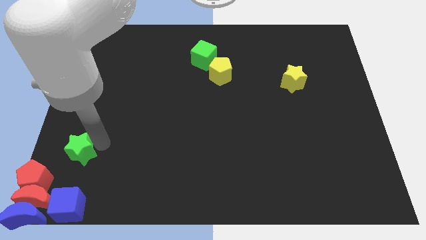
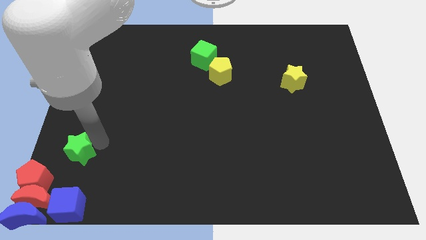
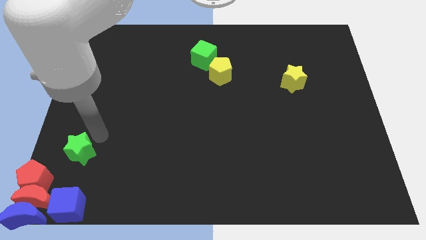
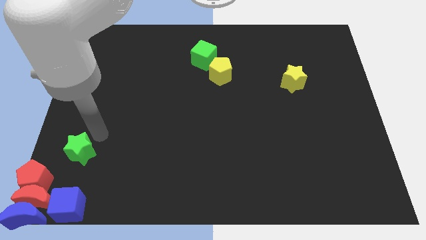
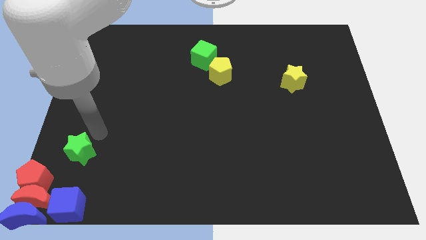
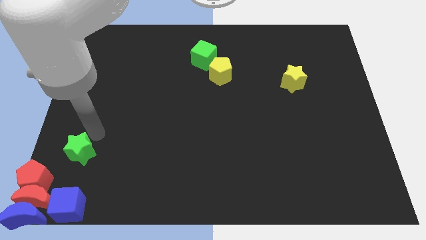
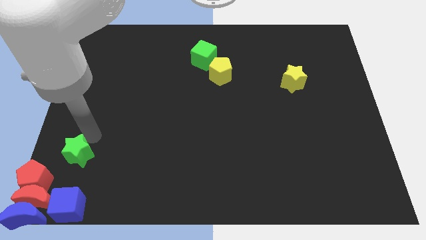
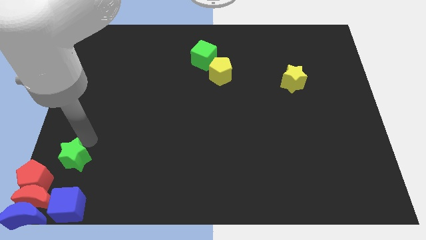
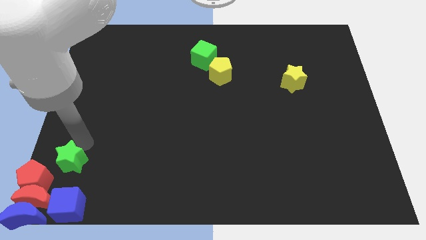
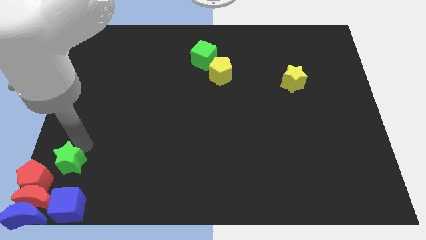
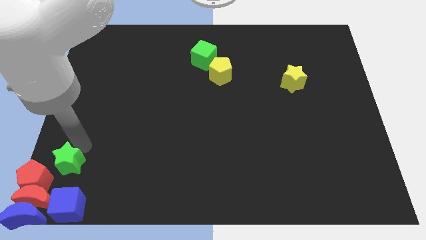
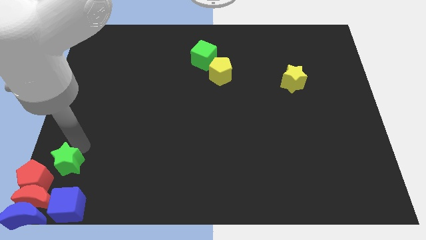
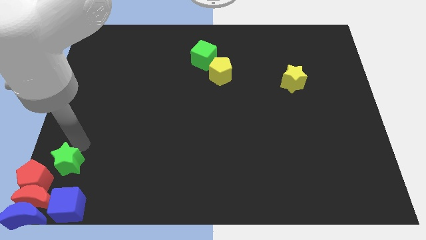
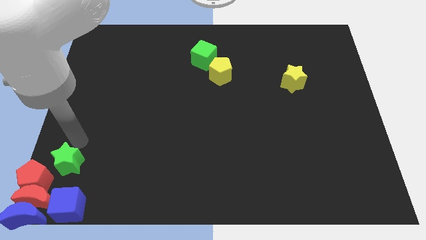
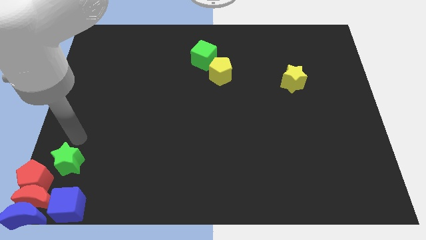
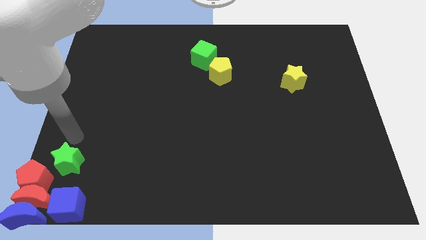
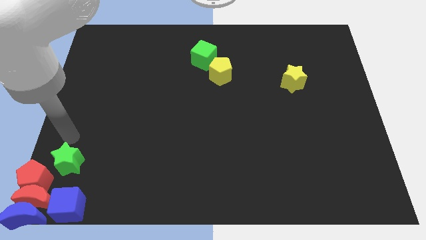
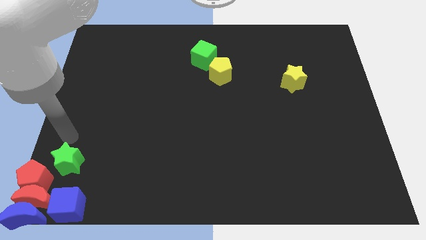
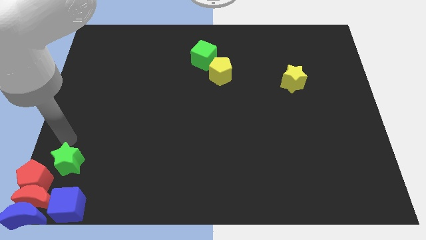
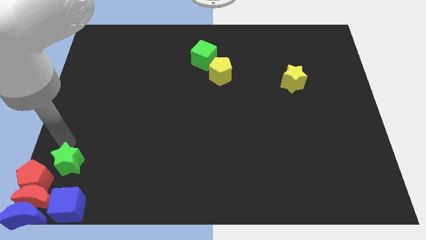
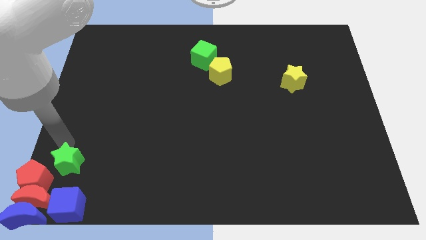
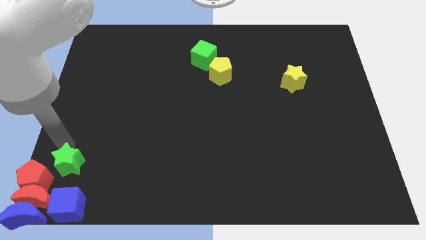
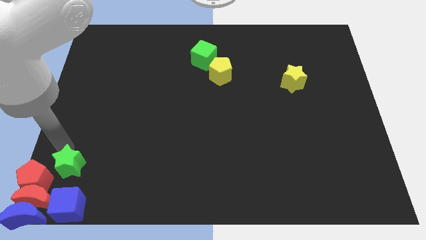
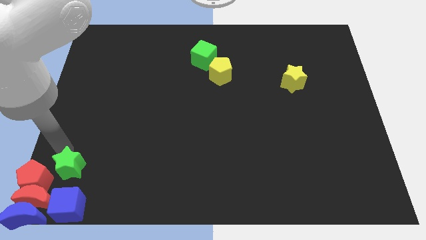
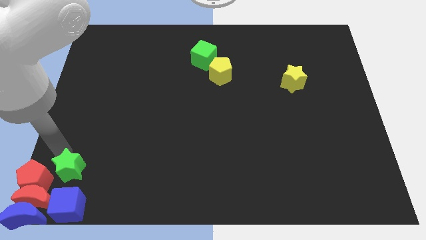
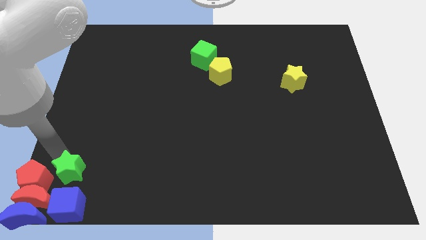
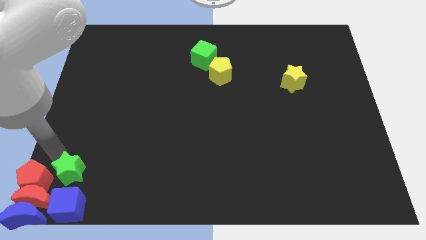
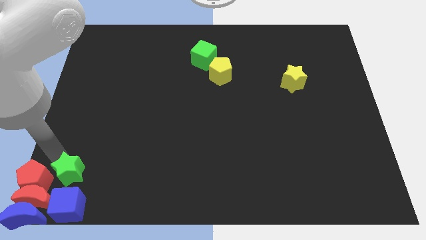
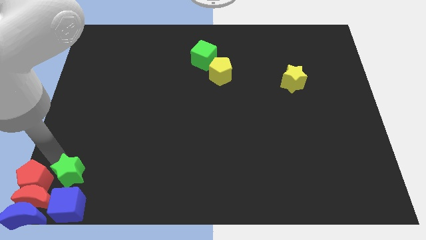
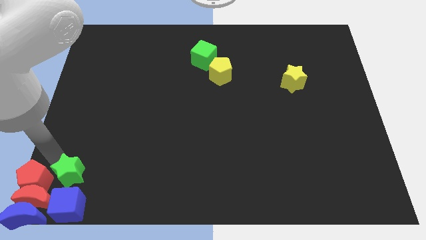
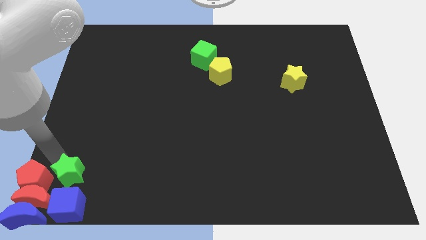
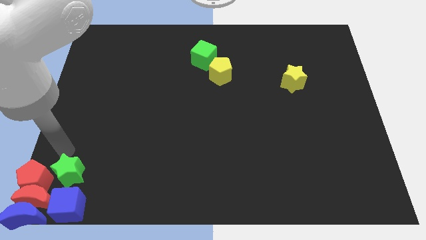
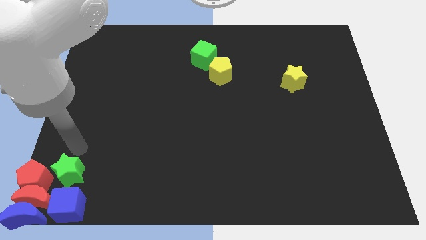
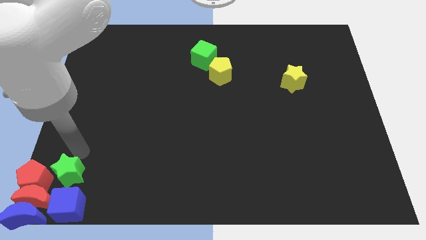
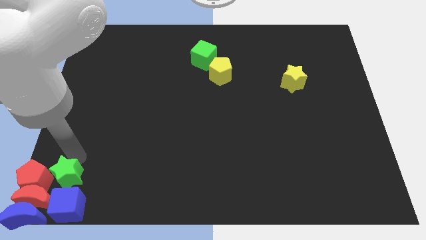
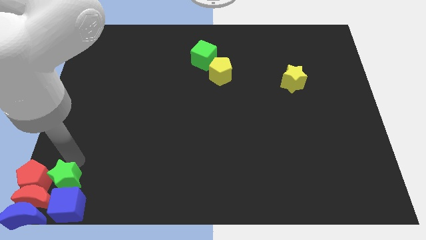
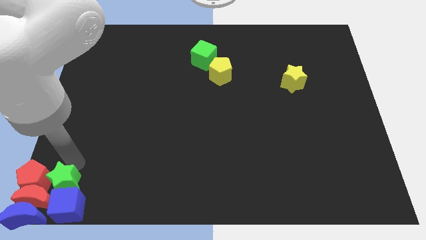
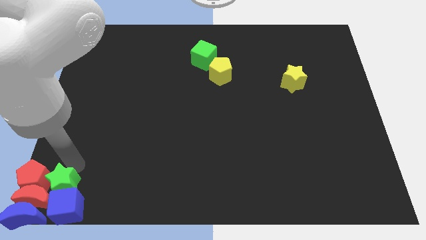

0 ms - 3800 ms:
place the green star right to the red pentagon

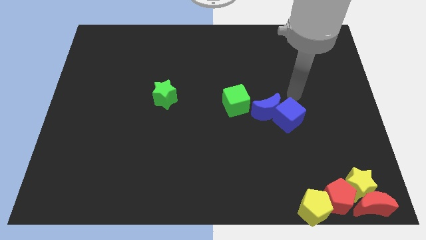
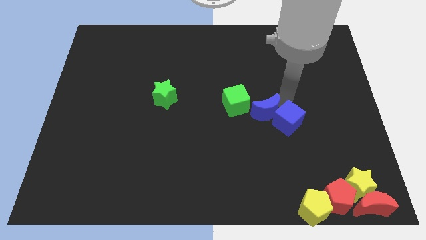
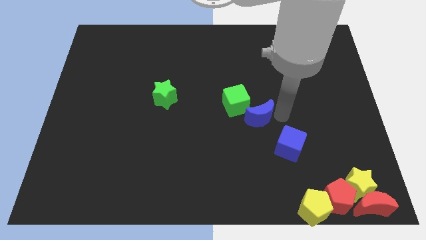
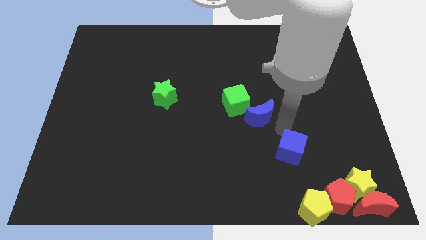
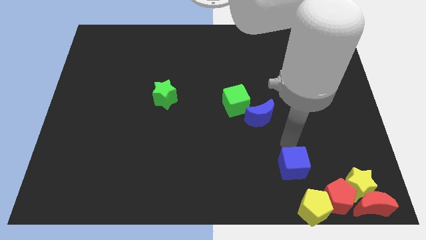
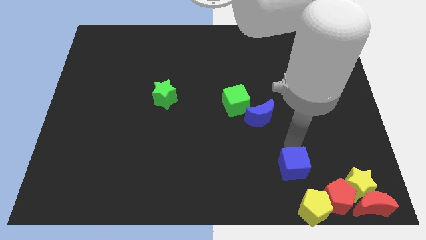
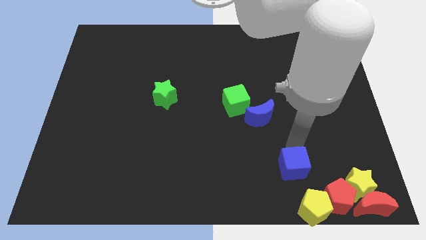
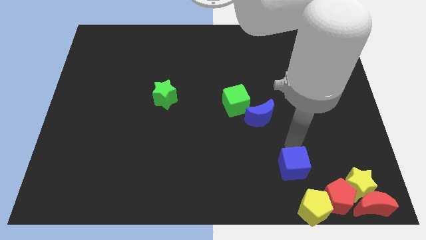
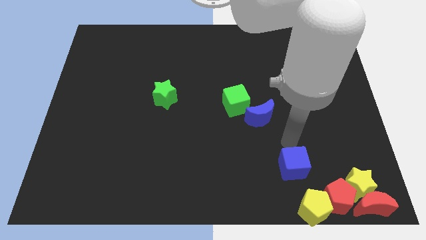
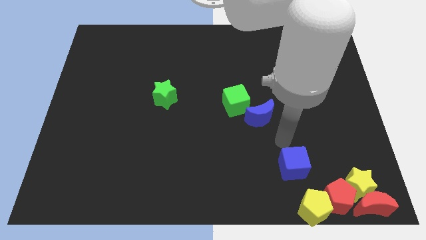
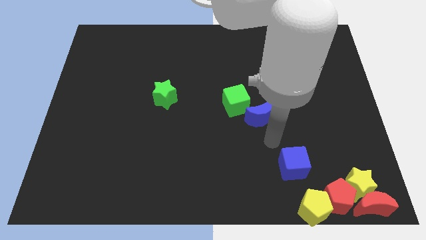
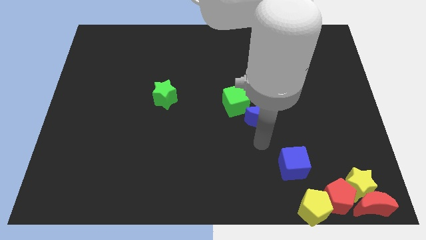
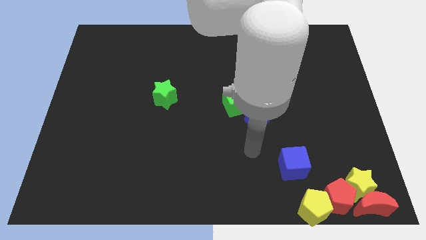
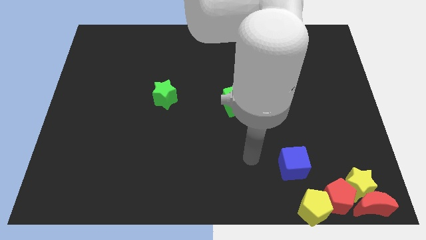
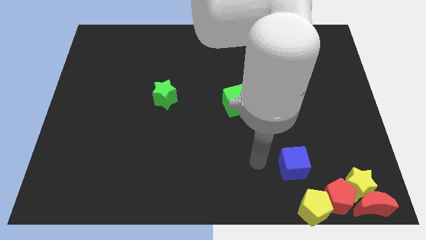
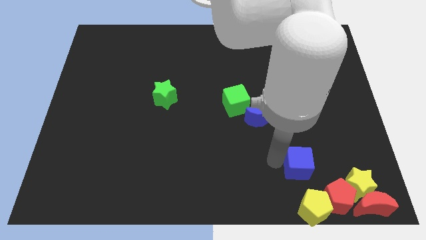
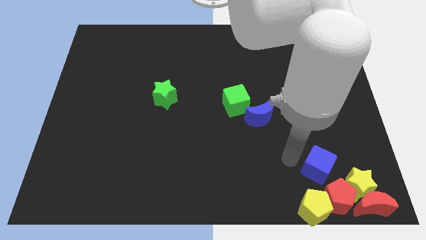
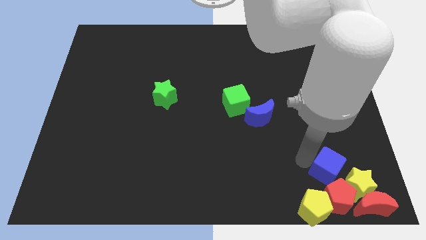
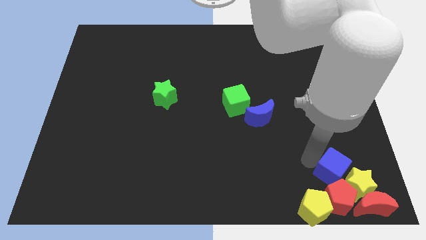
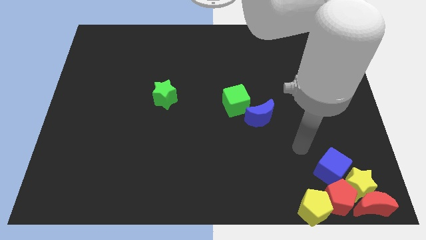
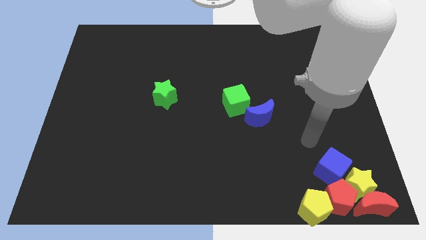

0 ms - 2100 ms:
push the blue cube into the red pentagon

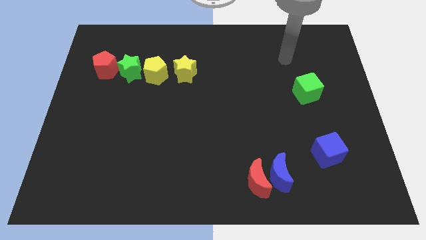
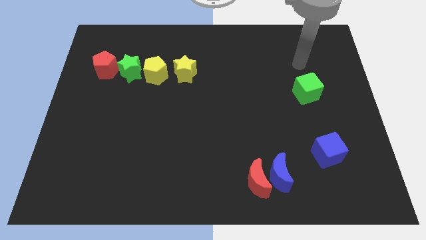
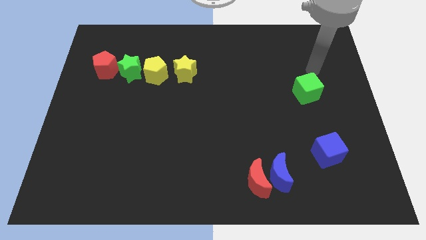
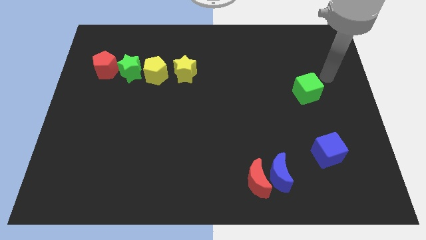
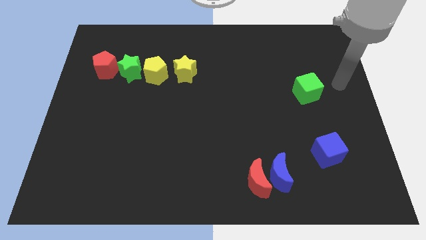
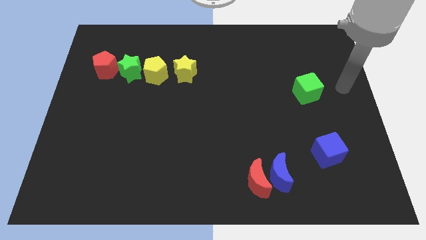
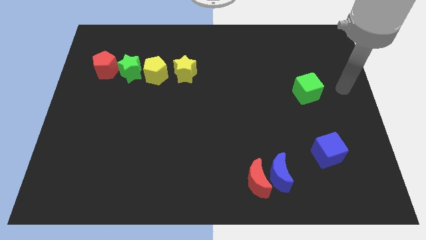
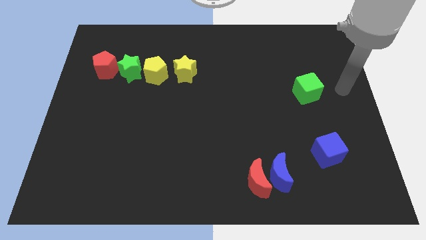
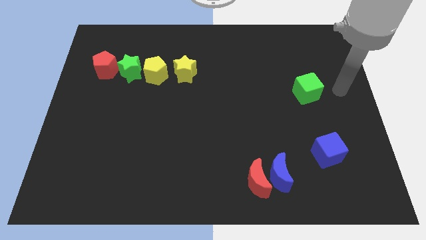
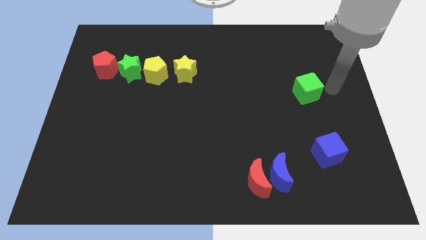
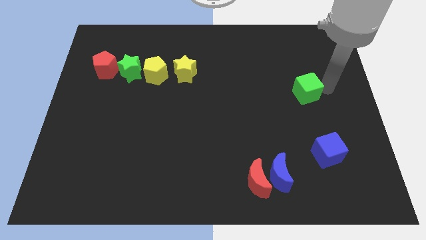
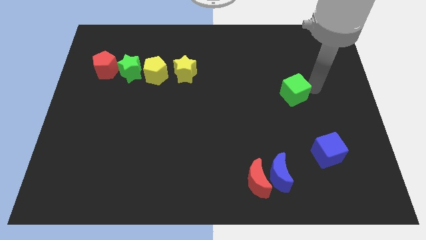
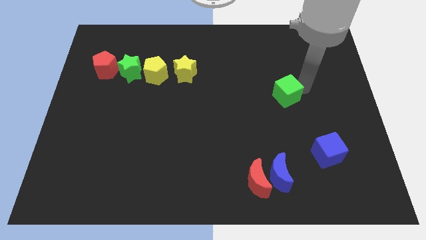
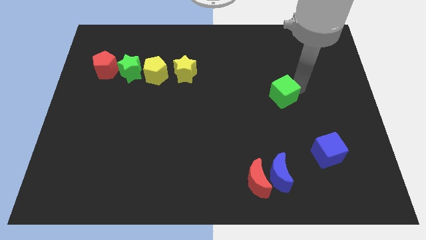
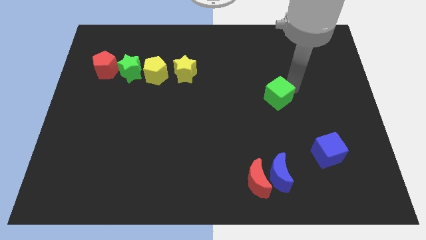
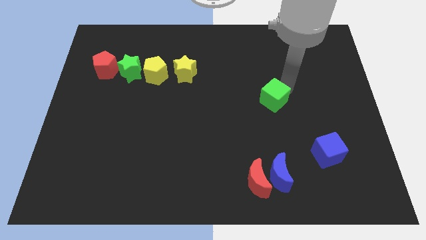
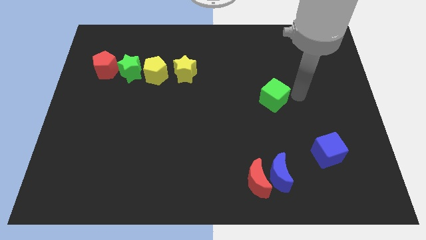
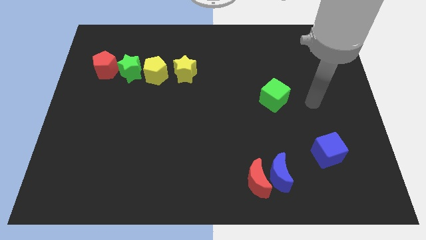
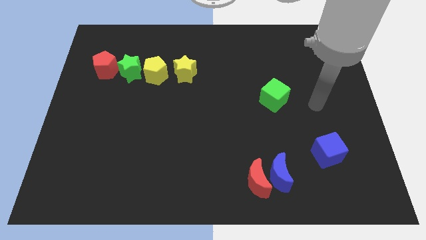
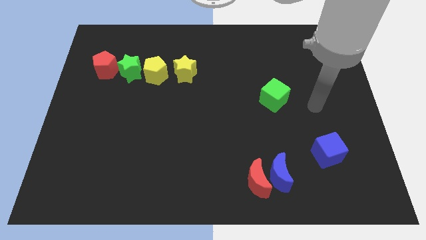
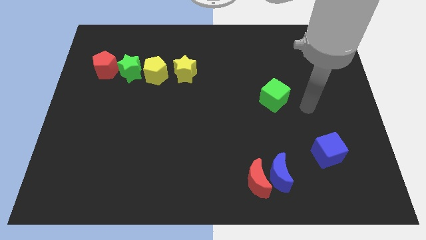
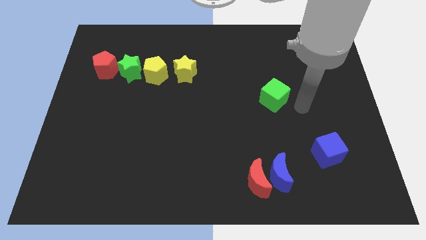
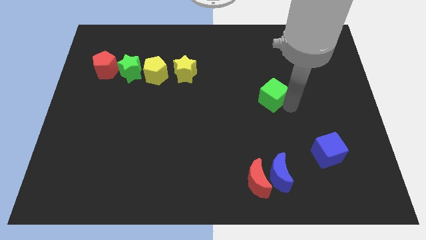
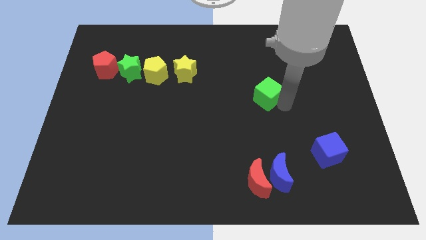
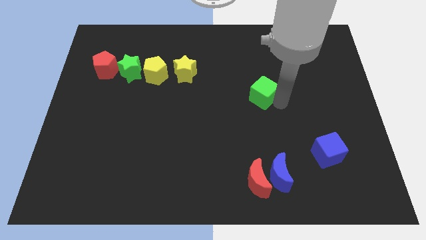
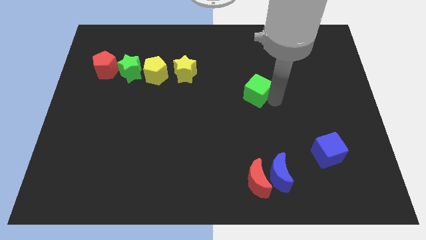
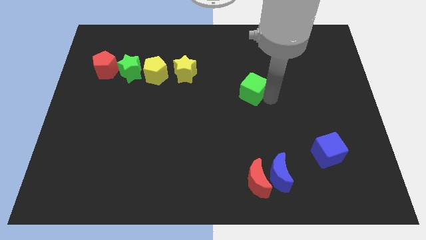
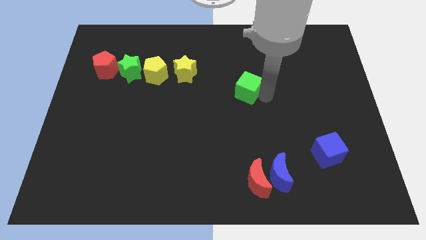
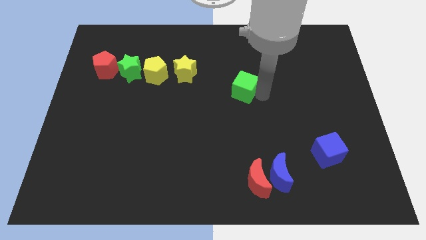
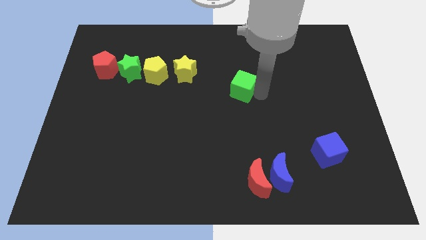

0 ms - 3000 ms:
push green cube above red crescent
